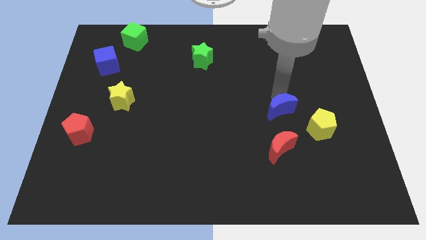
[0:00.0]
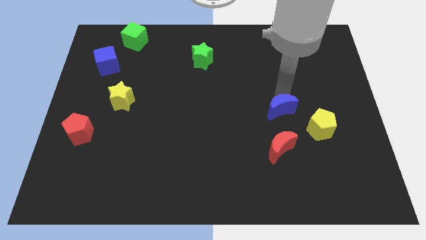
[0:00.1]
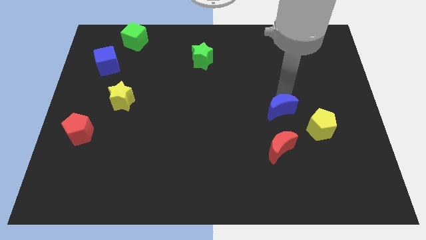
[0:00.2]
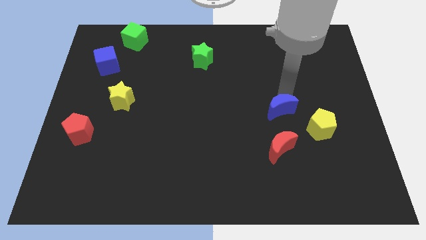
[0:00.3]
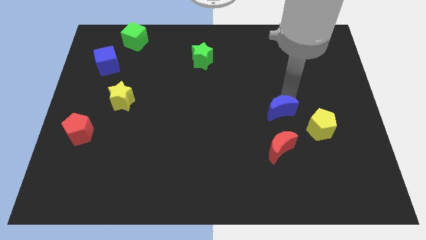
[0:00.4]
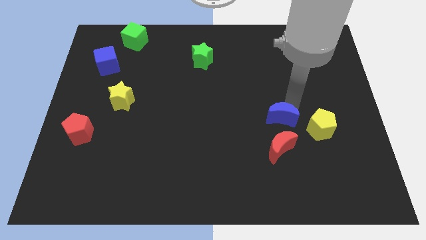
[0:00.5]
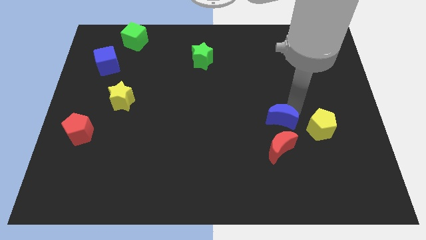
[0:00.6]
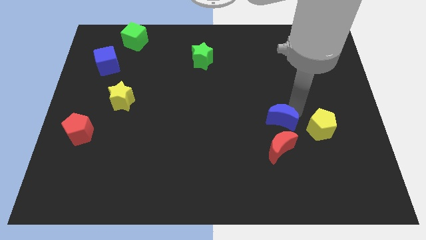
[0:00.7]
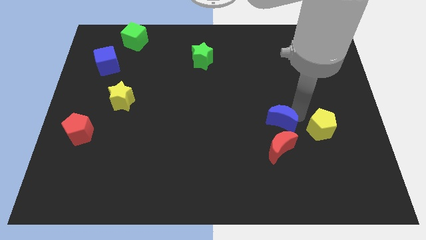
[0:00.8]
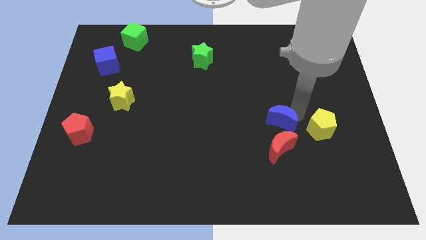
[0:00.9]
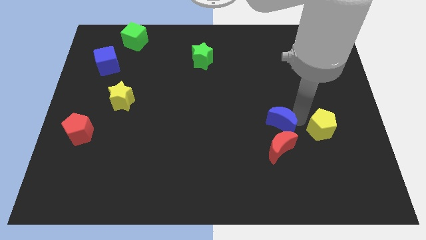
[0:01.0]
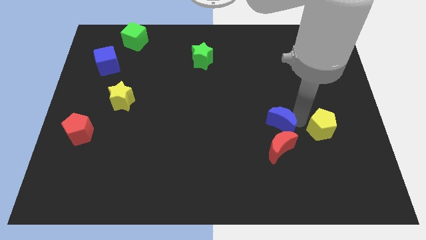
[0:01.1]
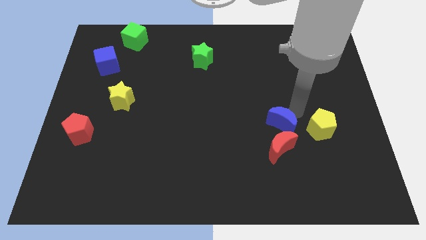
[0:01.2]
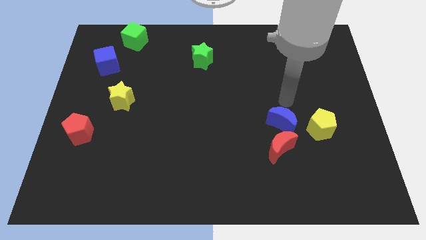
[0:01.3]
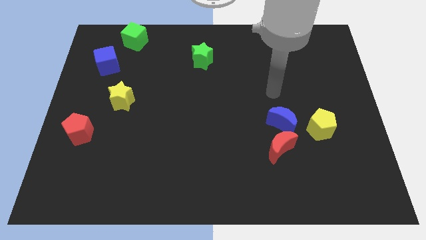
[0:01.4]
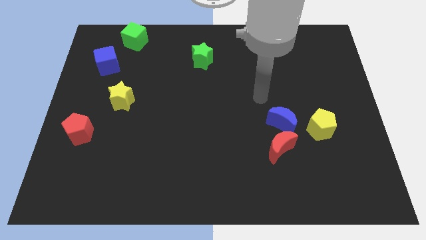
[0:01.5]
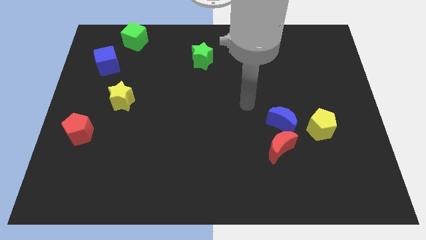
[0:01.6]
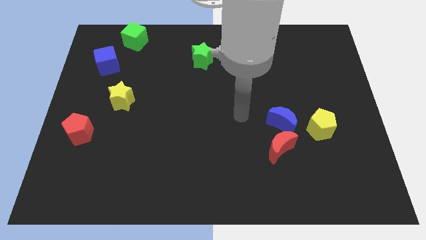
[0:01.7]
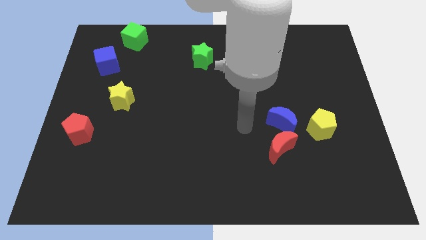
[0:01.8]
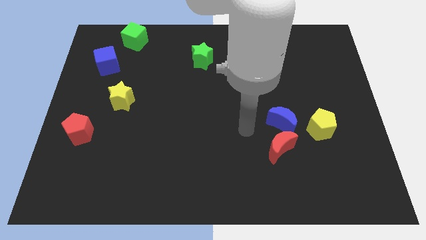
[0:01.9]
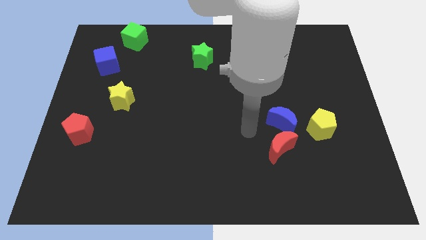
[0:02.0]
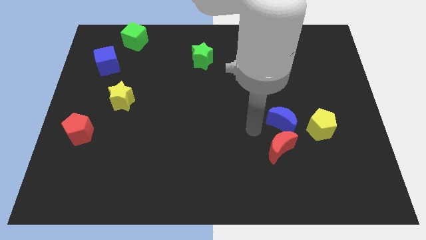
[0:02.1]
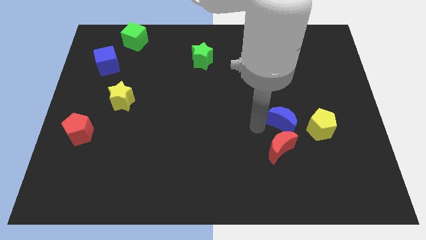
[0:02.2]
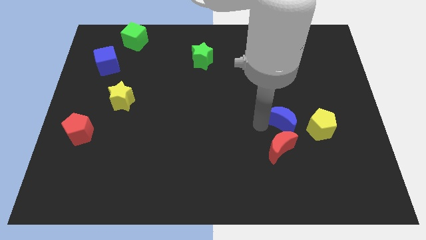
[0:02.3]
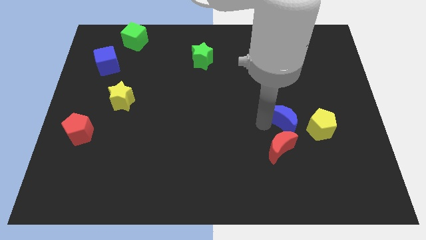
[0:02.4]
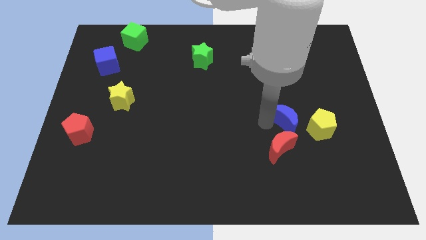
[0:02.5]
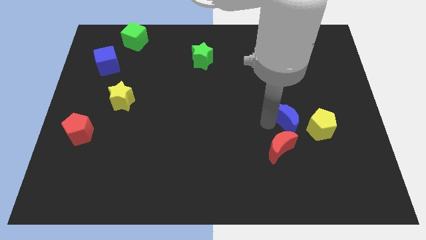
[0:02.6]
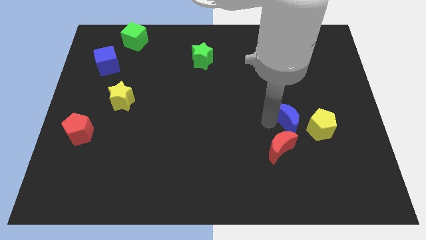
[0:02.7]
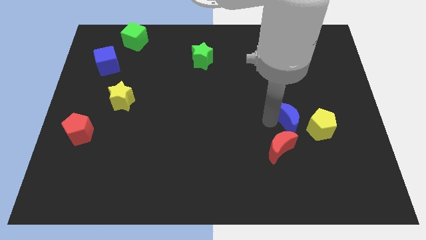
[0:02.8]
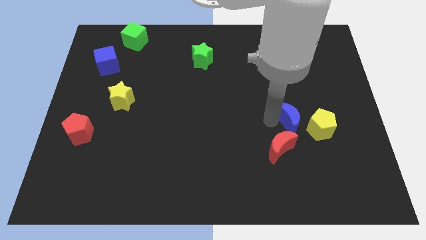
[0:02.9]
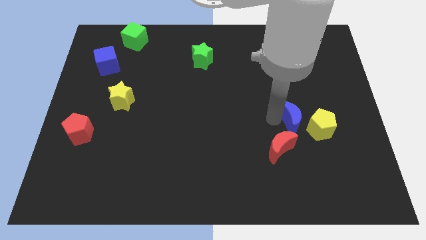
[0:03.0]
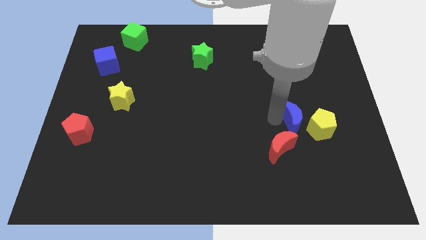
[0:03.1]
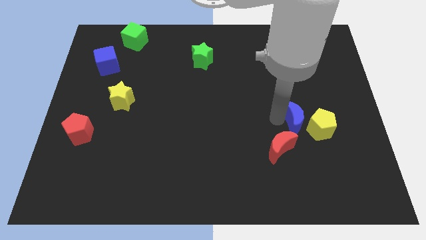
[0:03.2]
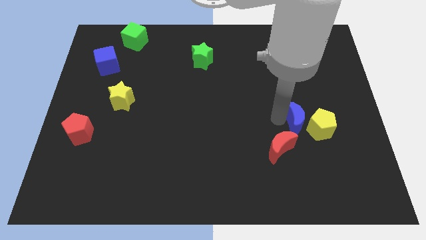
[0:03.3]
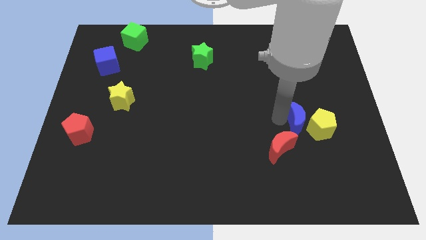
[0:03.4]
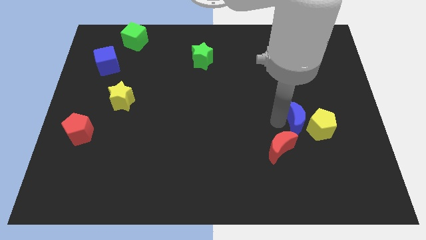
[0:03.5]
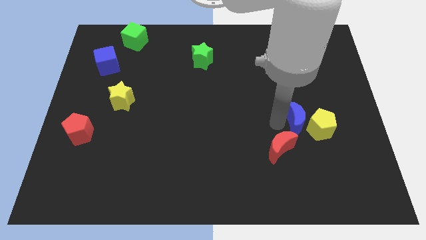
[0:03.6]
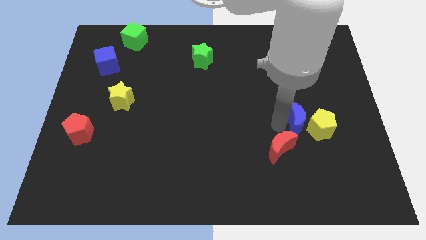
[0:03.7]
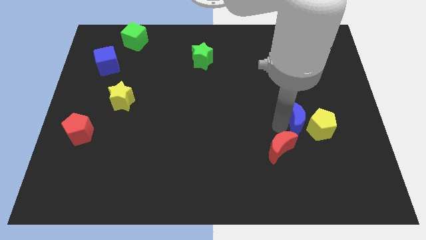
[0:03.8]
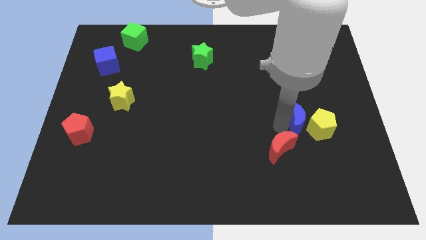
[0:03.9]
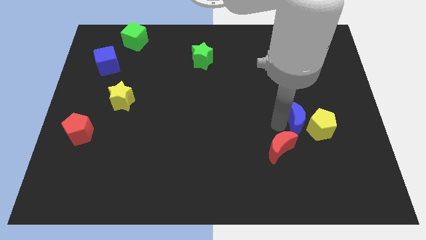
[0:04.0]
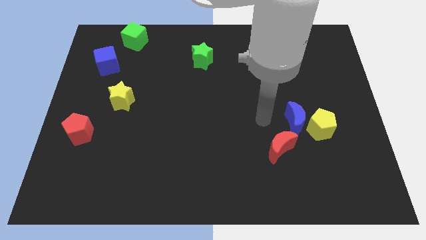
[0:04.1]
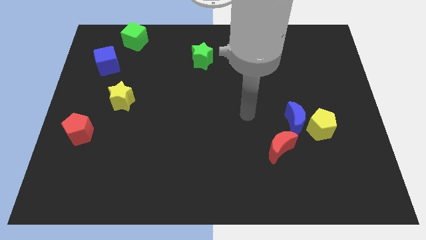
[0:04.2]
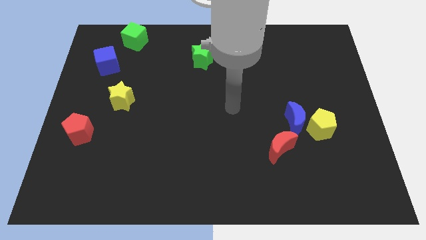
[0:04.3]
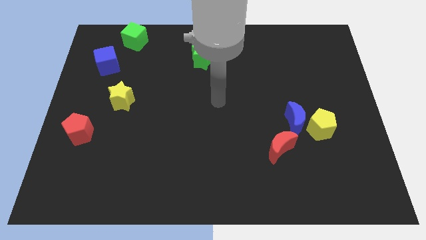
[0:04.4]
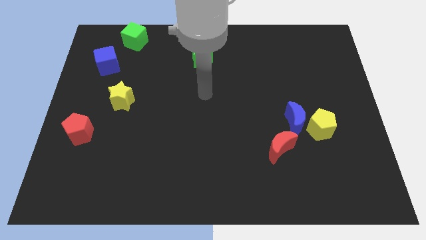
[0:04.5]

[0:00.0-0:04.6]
push the blue crescent in between the red crescent and the yellow pentagon

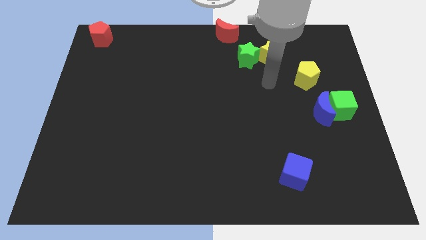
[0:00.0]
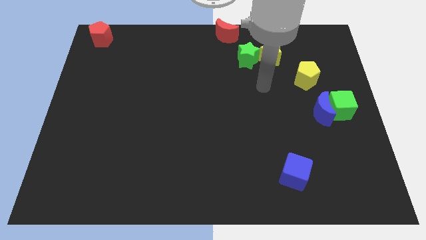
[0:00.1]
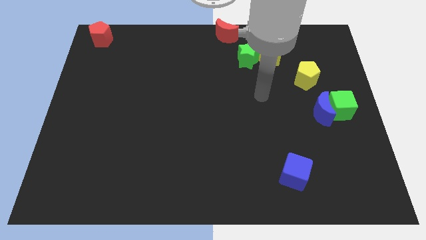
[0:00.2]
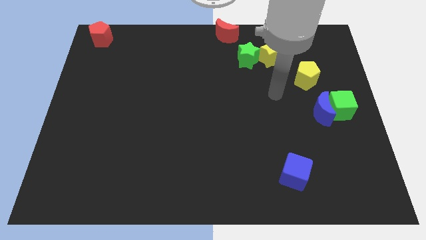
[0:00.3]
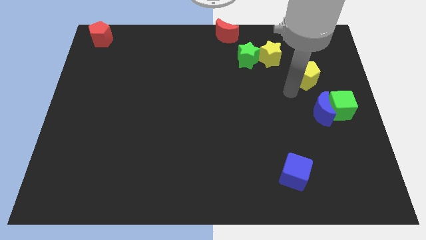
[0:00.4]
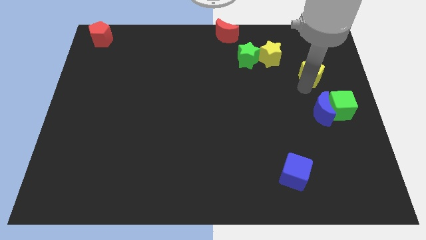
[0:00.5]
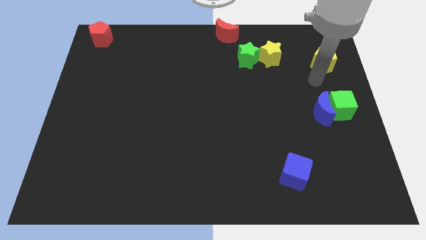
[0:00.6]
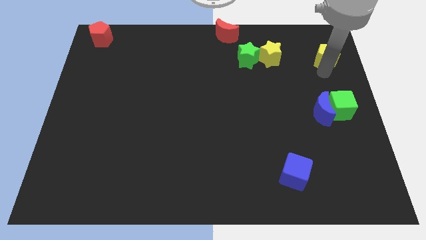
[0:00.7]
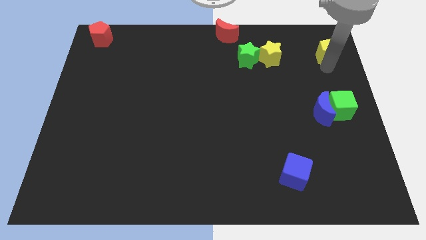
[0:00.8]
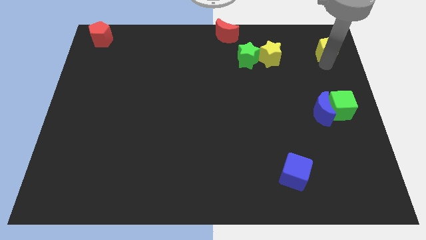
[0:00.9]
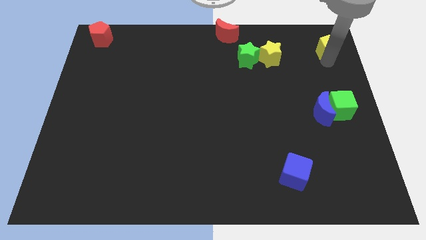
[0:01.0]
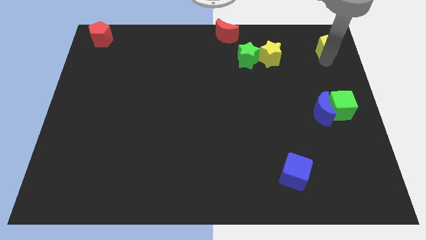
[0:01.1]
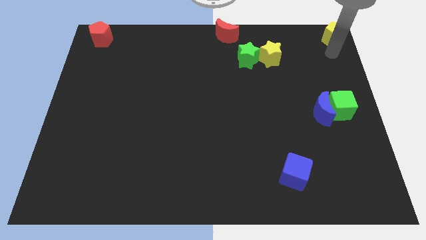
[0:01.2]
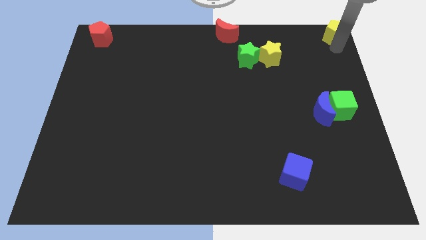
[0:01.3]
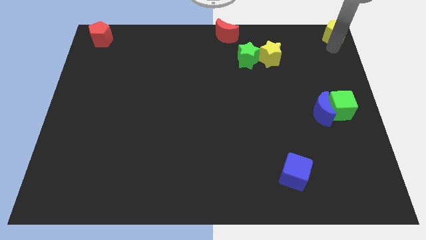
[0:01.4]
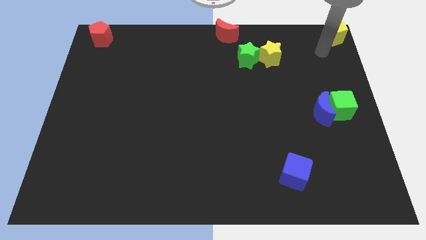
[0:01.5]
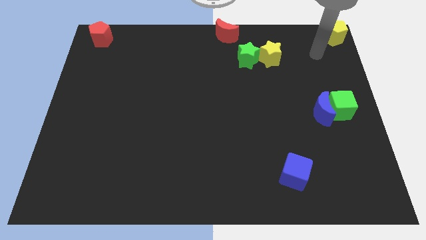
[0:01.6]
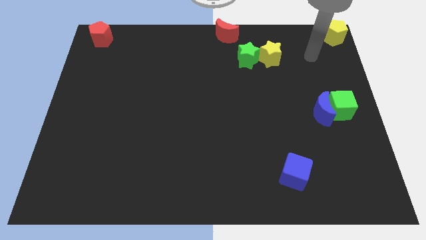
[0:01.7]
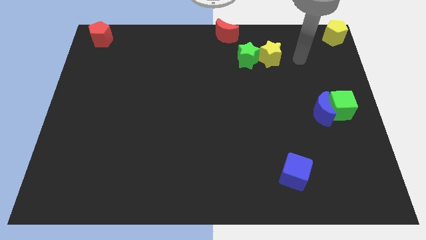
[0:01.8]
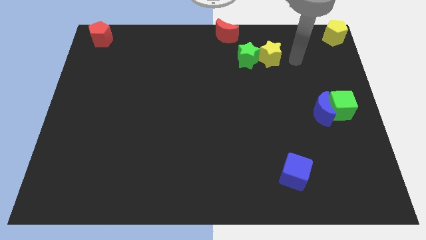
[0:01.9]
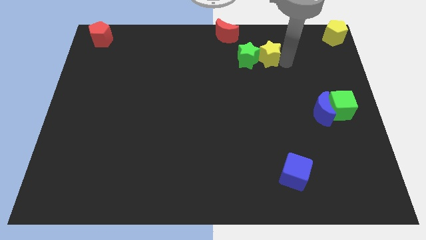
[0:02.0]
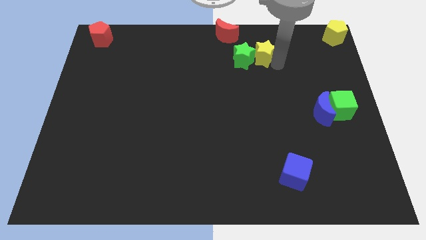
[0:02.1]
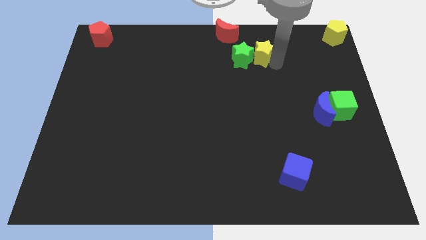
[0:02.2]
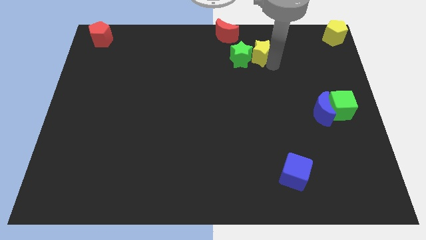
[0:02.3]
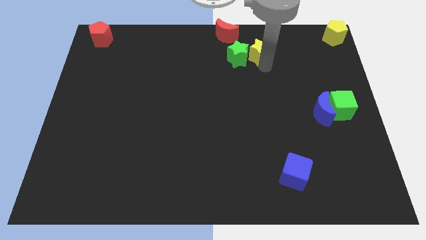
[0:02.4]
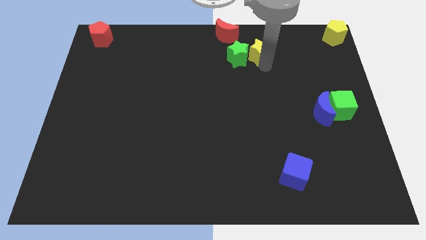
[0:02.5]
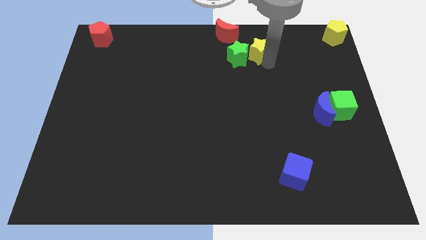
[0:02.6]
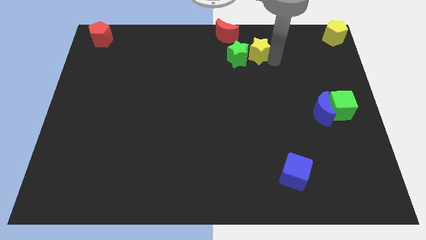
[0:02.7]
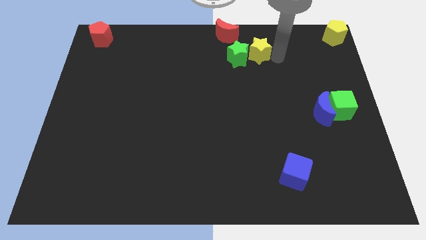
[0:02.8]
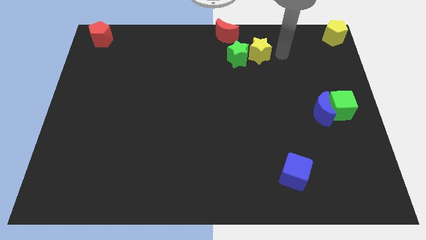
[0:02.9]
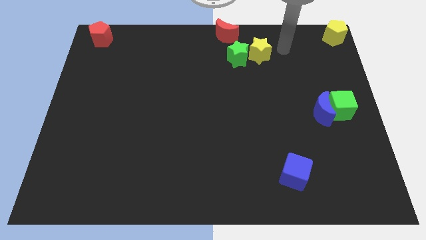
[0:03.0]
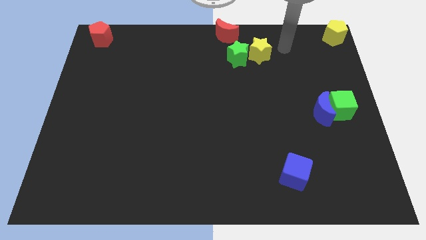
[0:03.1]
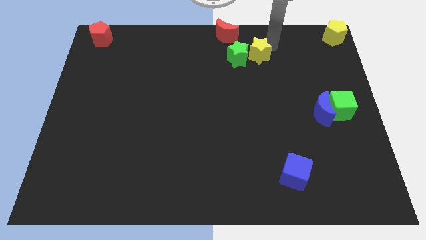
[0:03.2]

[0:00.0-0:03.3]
drag the yellow pentagon to the top right corner

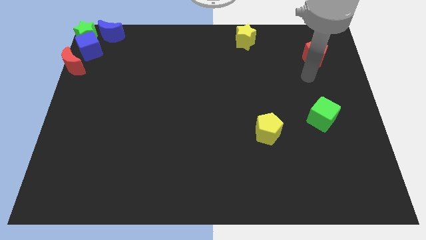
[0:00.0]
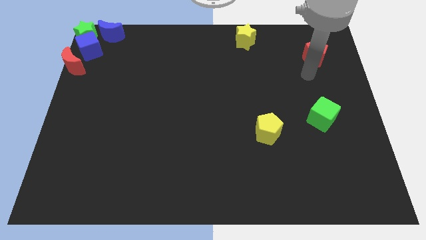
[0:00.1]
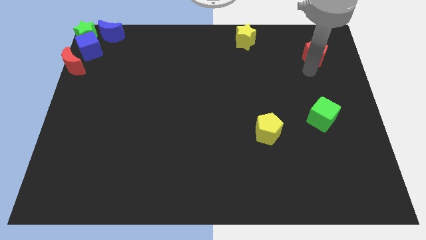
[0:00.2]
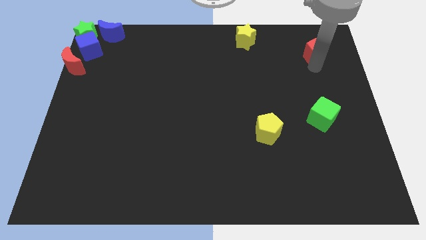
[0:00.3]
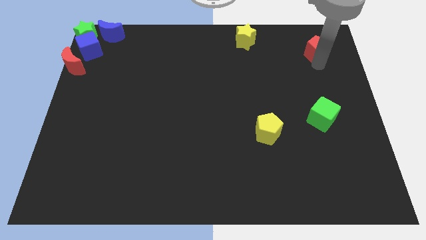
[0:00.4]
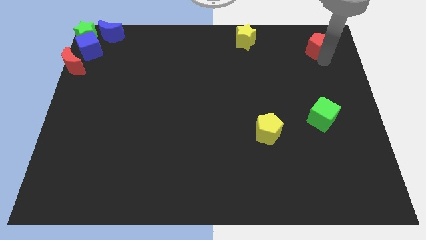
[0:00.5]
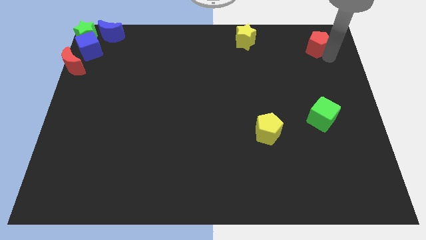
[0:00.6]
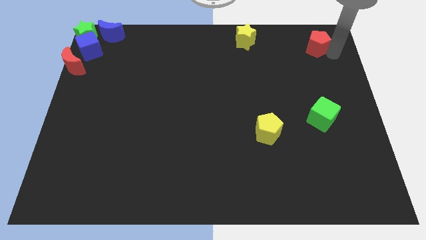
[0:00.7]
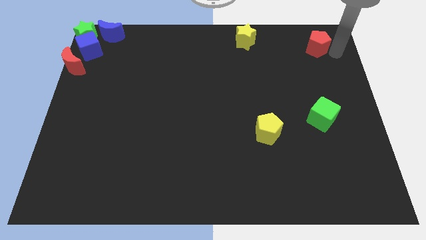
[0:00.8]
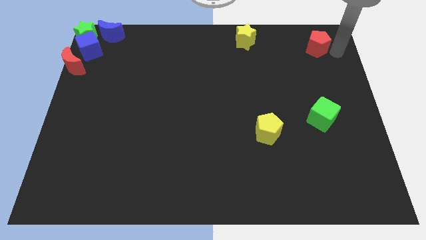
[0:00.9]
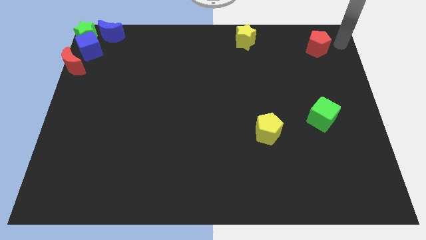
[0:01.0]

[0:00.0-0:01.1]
move the red pentagon slightly to the top
